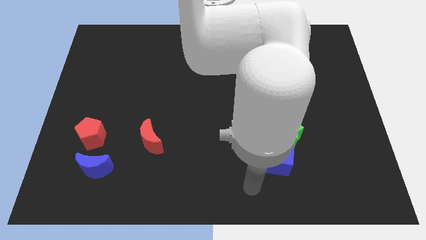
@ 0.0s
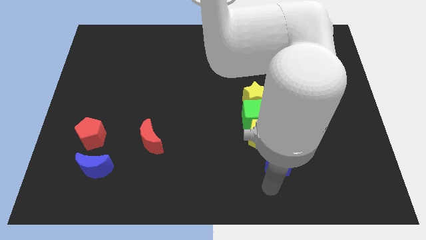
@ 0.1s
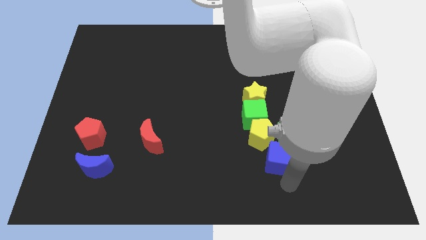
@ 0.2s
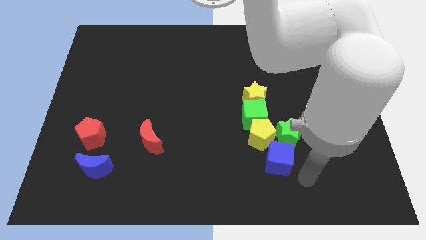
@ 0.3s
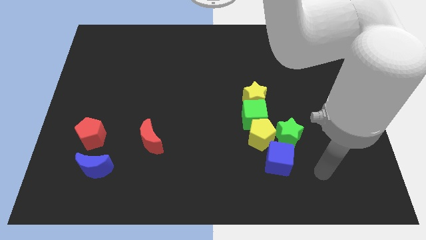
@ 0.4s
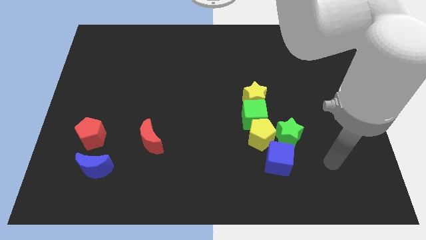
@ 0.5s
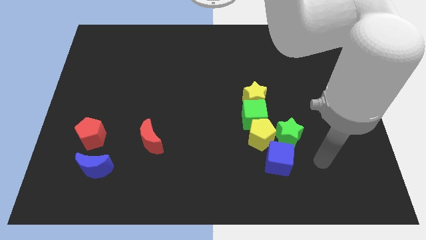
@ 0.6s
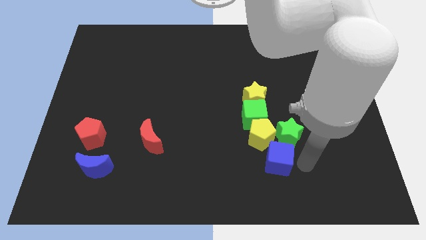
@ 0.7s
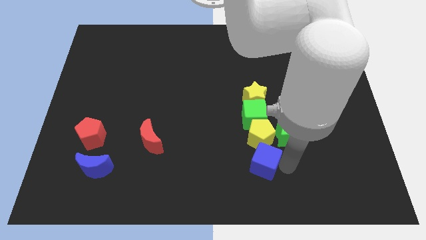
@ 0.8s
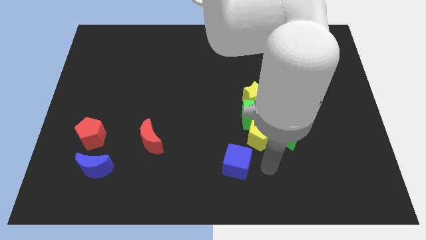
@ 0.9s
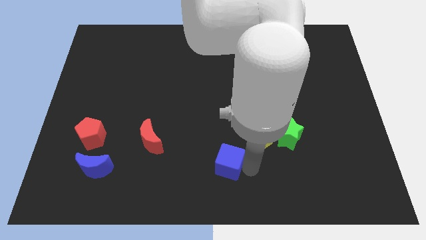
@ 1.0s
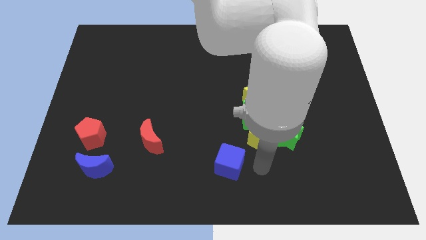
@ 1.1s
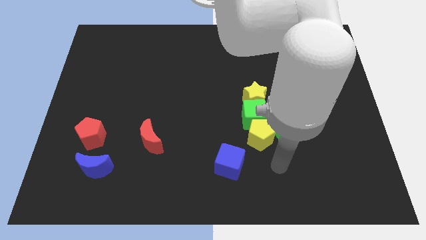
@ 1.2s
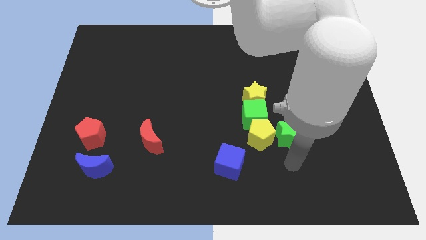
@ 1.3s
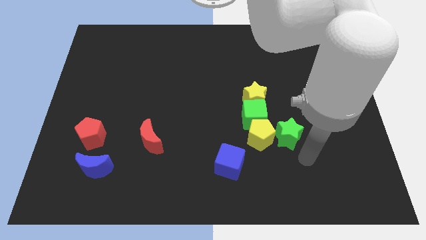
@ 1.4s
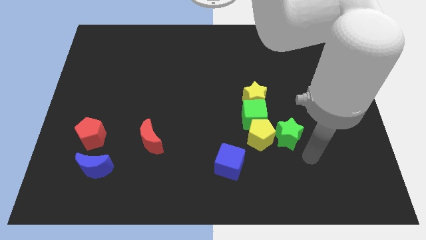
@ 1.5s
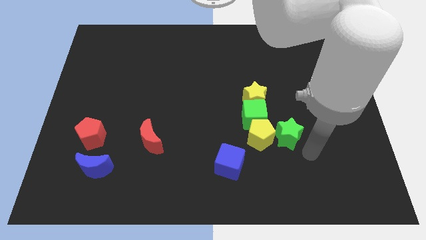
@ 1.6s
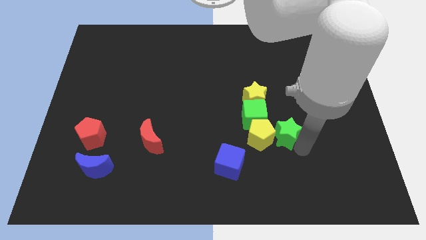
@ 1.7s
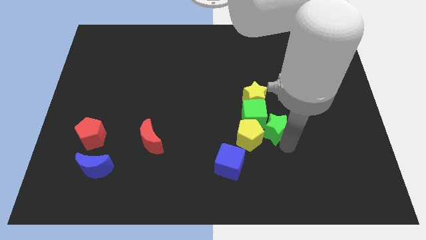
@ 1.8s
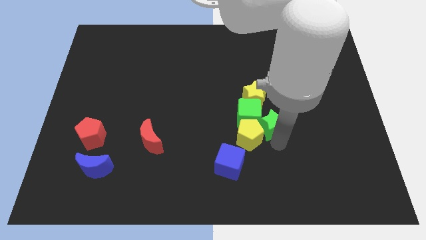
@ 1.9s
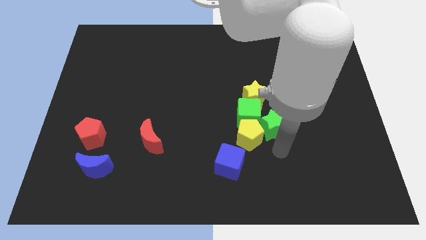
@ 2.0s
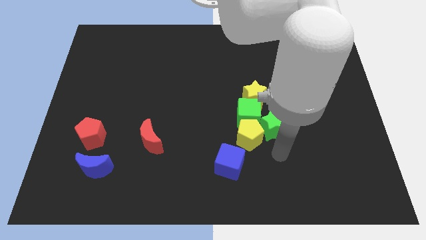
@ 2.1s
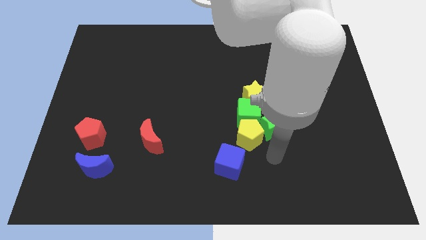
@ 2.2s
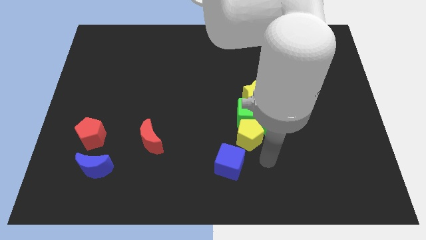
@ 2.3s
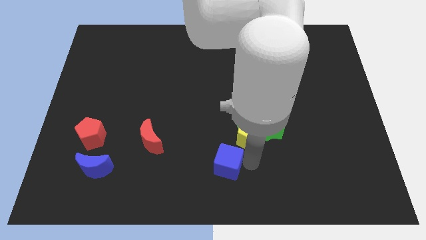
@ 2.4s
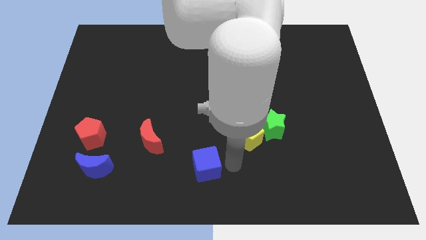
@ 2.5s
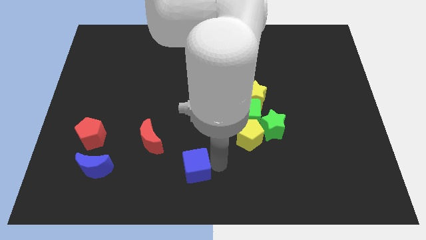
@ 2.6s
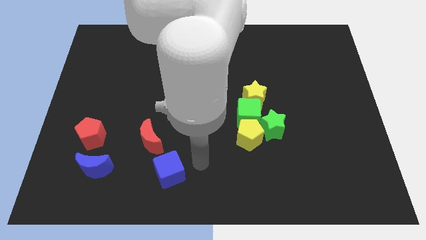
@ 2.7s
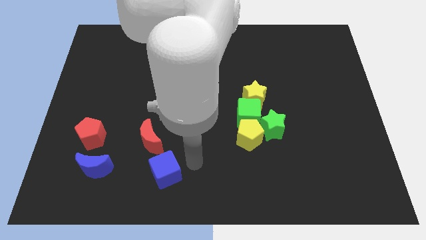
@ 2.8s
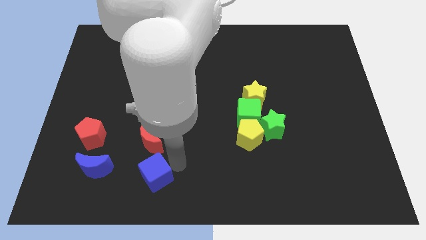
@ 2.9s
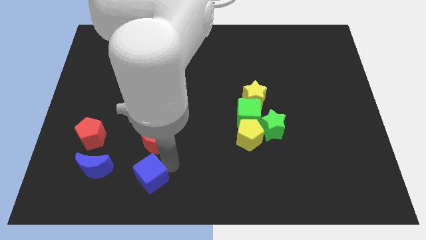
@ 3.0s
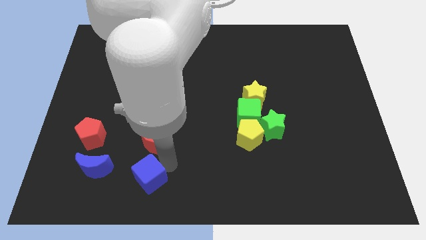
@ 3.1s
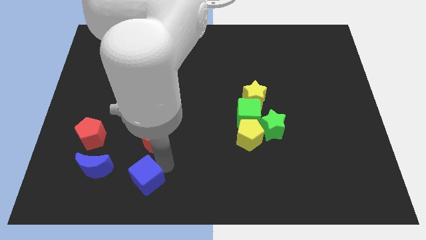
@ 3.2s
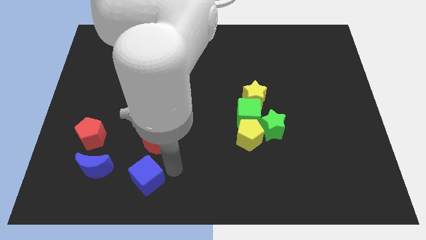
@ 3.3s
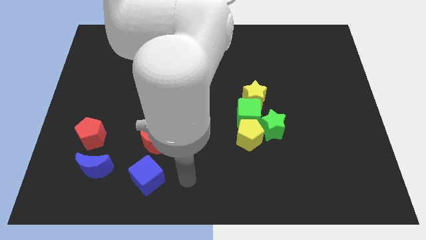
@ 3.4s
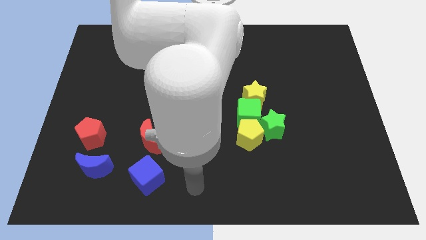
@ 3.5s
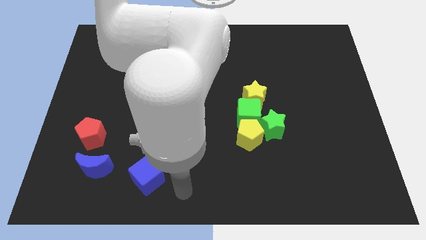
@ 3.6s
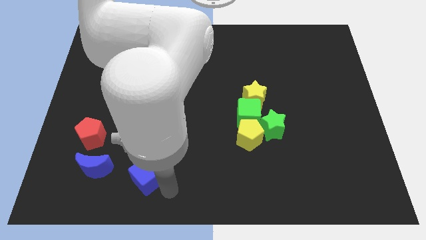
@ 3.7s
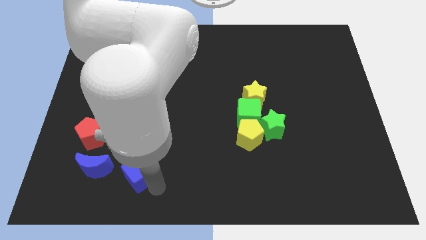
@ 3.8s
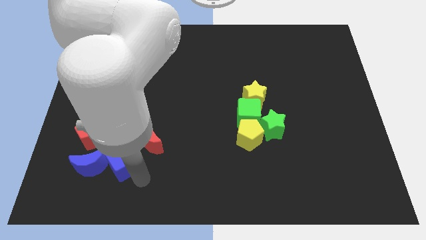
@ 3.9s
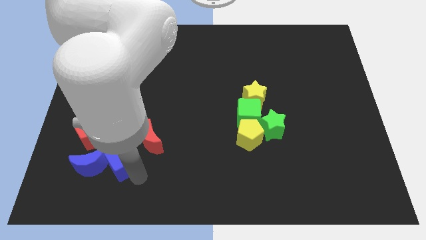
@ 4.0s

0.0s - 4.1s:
place the blue cube to the right of the blue moon

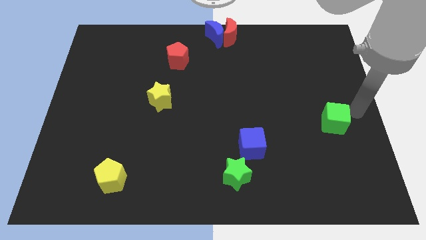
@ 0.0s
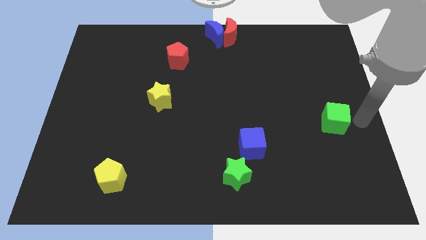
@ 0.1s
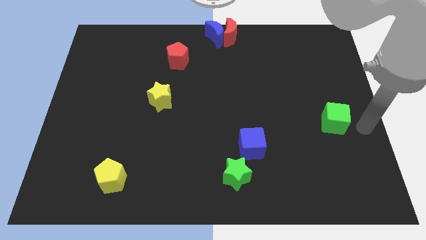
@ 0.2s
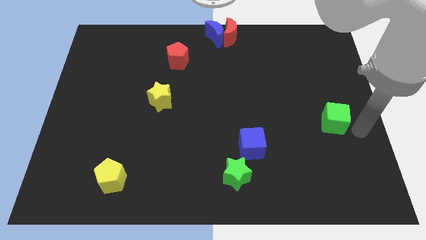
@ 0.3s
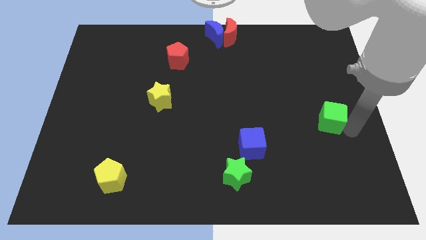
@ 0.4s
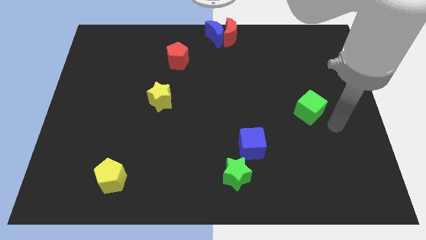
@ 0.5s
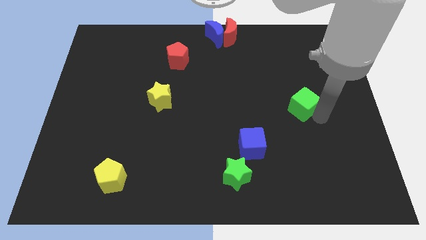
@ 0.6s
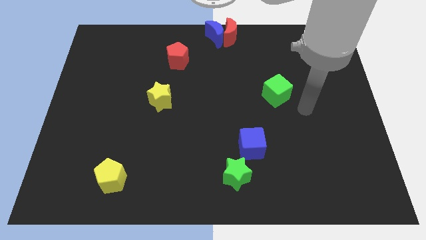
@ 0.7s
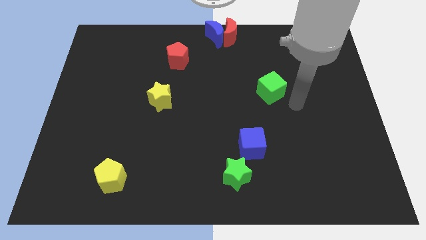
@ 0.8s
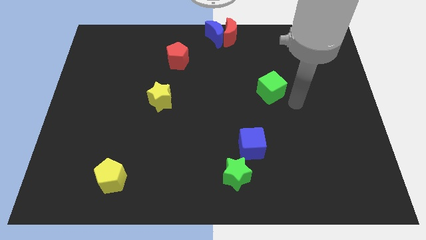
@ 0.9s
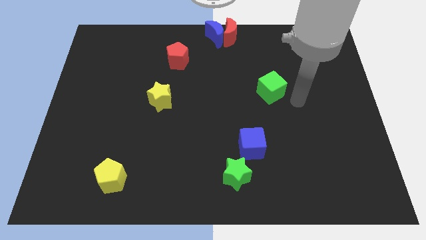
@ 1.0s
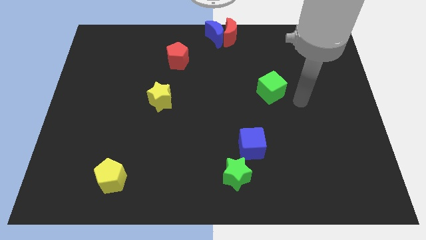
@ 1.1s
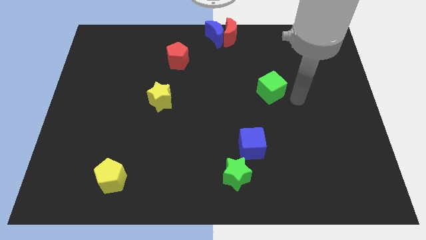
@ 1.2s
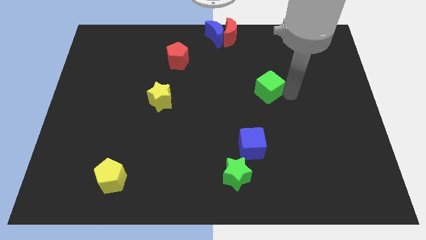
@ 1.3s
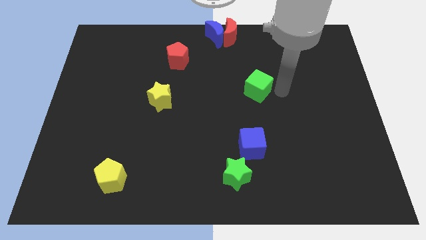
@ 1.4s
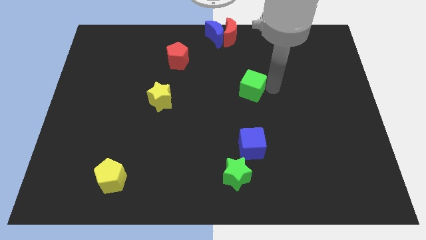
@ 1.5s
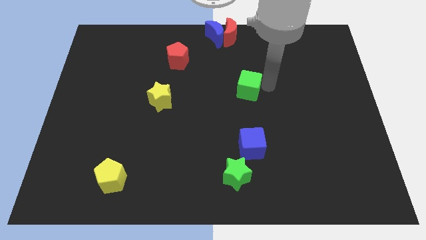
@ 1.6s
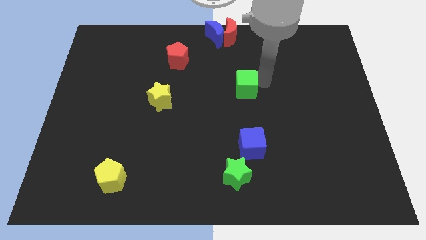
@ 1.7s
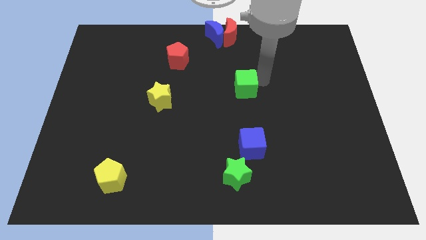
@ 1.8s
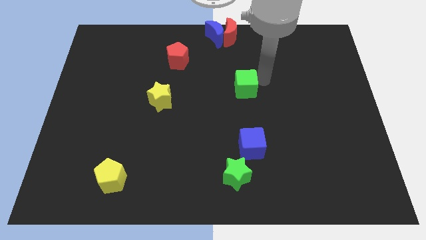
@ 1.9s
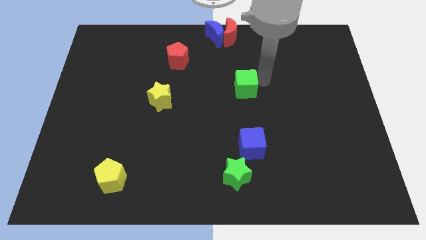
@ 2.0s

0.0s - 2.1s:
put the green cube on the top of the blue cube

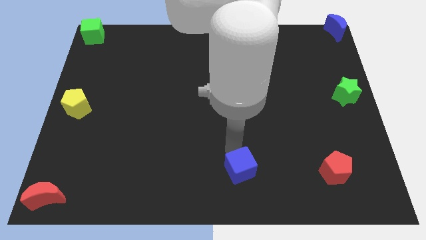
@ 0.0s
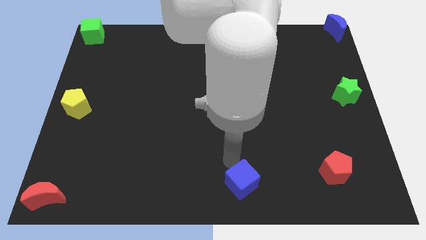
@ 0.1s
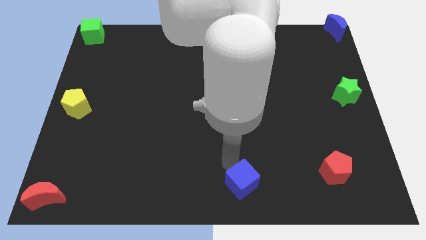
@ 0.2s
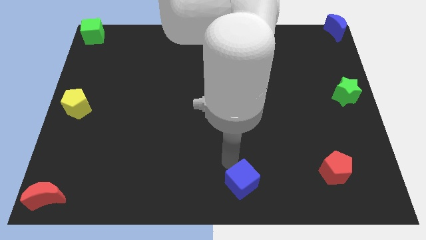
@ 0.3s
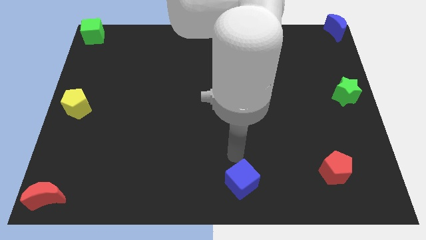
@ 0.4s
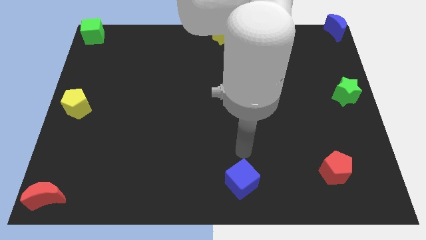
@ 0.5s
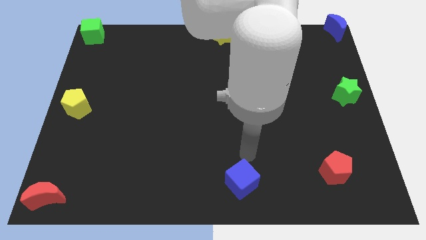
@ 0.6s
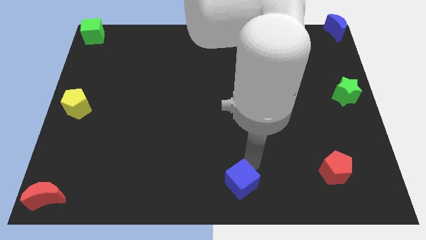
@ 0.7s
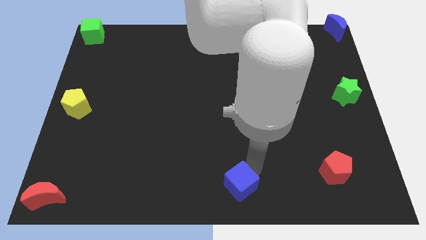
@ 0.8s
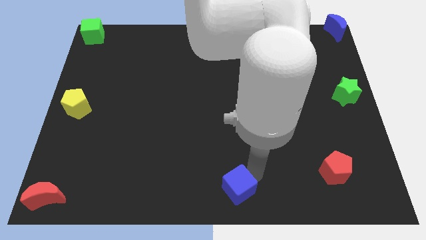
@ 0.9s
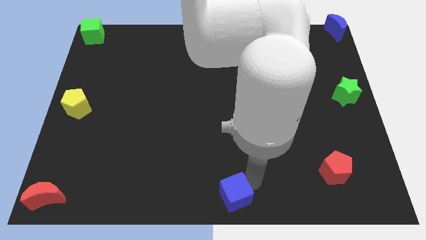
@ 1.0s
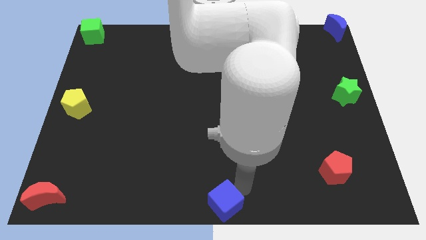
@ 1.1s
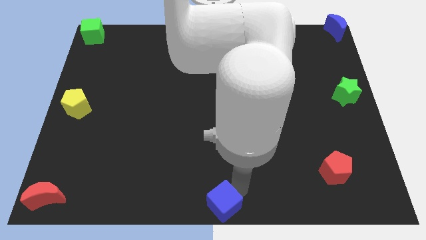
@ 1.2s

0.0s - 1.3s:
push the blue cube to the bottom center of the board

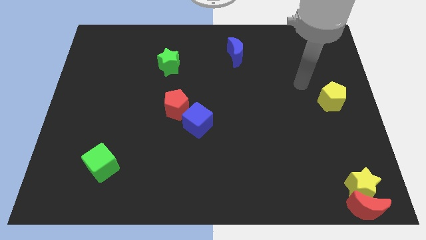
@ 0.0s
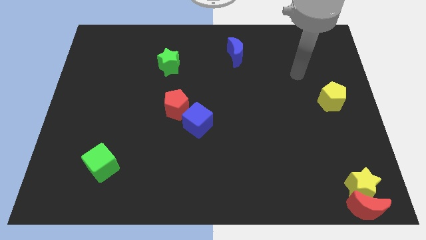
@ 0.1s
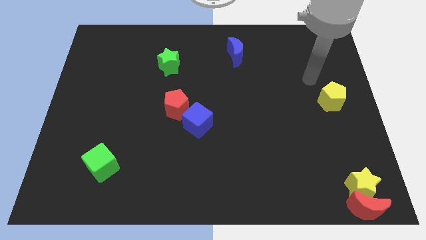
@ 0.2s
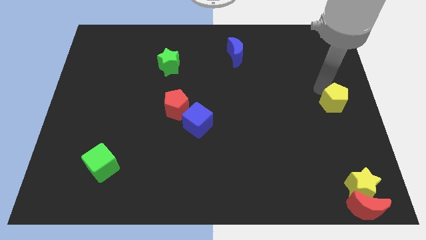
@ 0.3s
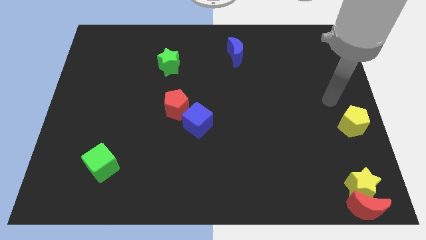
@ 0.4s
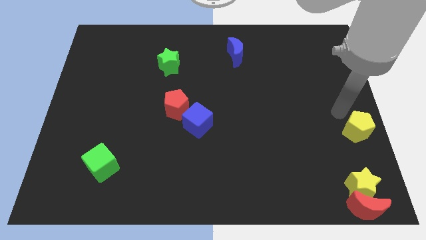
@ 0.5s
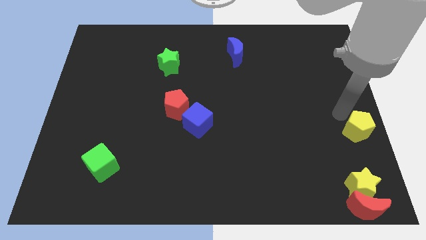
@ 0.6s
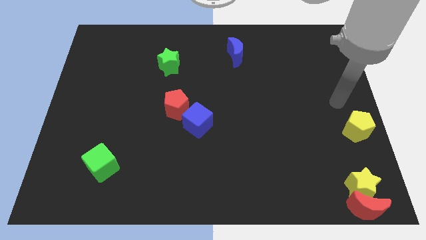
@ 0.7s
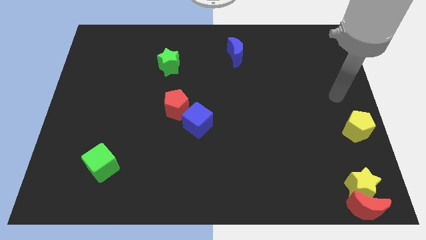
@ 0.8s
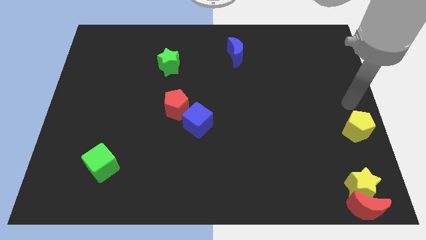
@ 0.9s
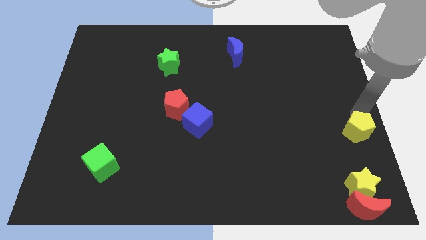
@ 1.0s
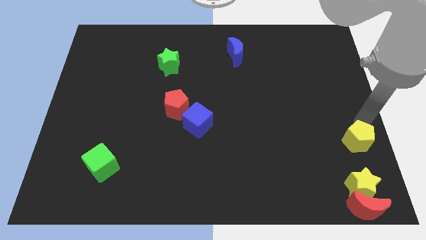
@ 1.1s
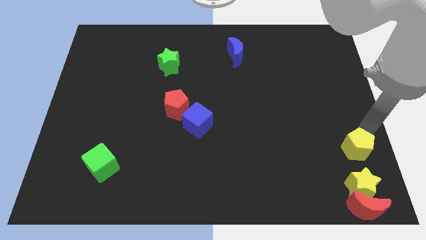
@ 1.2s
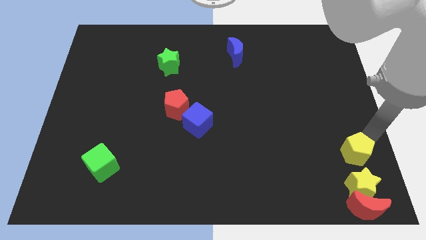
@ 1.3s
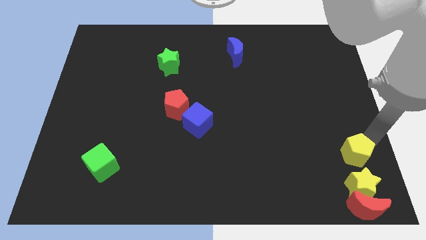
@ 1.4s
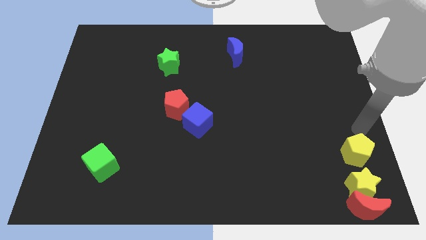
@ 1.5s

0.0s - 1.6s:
push yellow pentagon near to the yellow star
